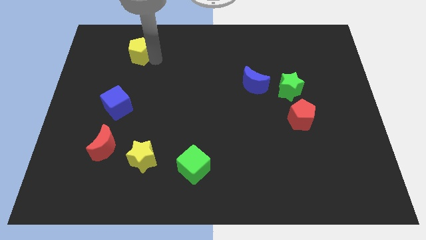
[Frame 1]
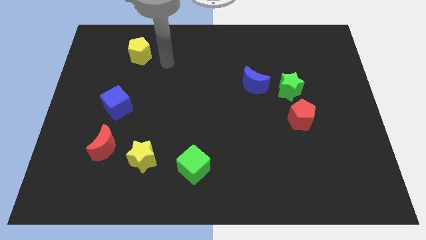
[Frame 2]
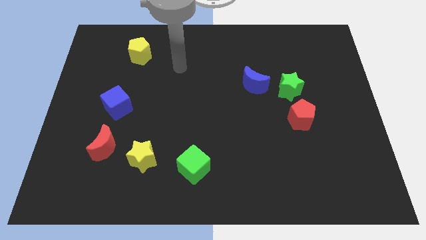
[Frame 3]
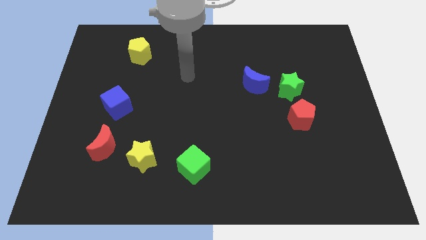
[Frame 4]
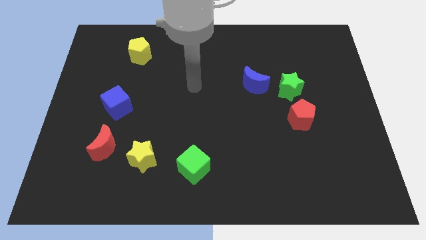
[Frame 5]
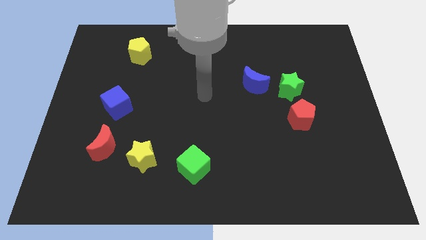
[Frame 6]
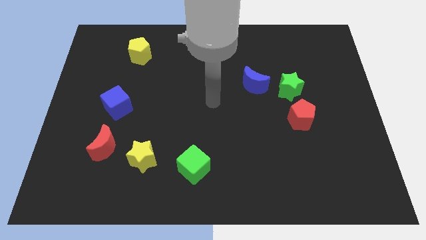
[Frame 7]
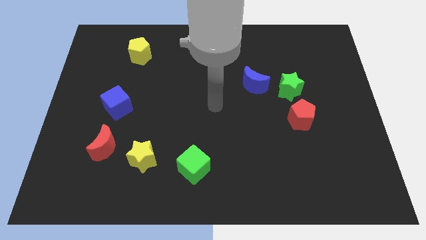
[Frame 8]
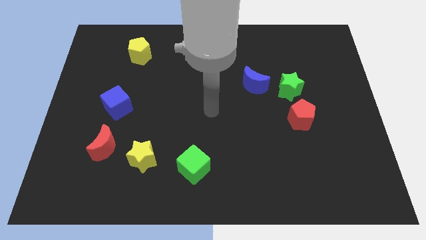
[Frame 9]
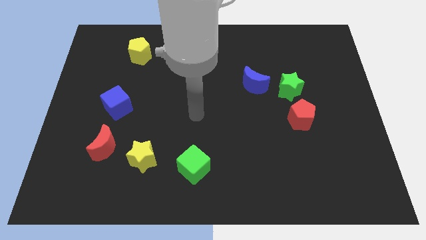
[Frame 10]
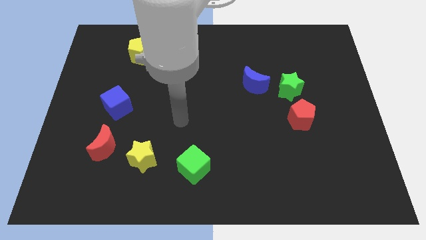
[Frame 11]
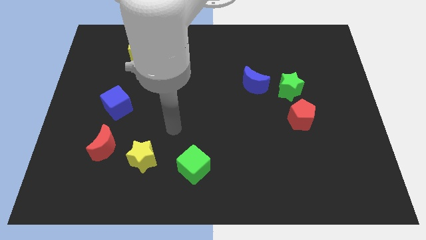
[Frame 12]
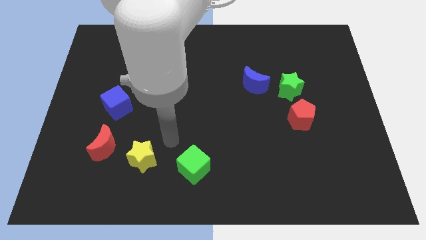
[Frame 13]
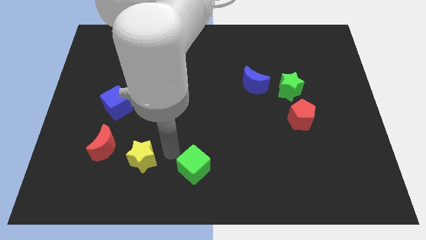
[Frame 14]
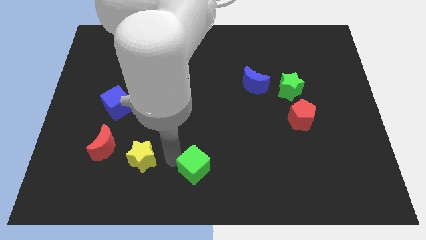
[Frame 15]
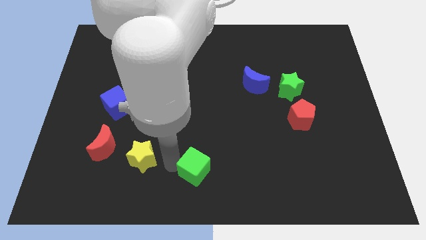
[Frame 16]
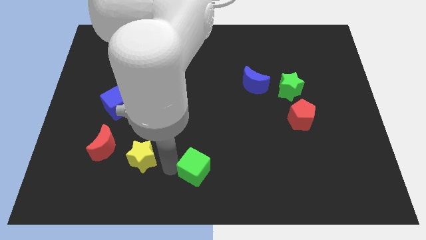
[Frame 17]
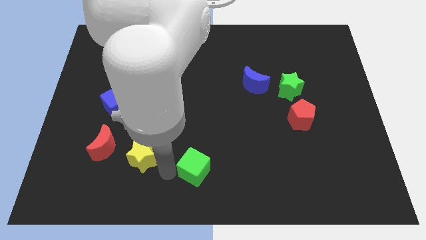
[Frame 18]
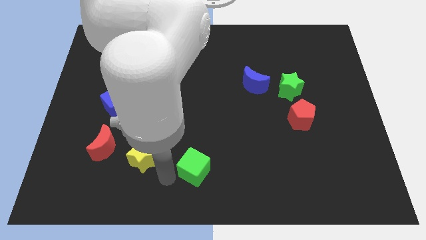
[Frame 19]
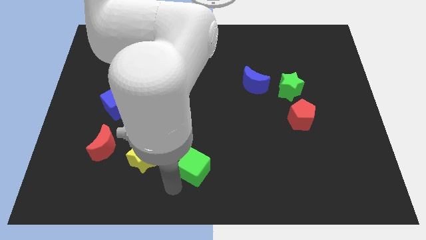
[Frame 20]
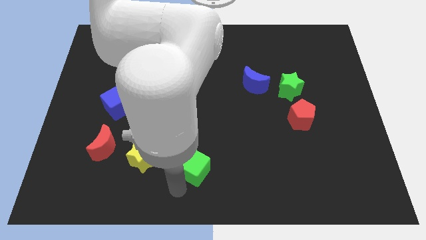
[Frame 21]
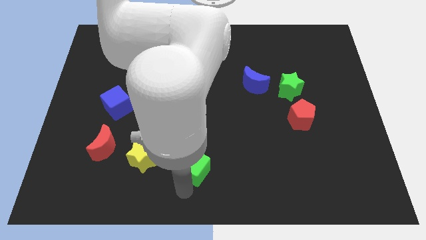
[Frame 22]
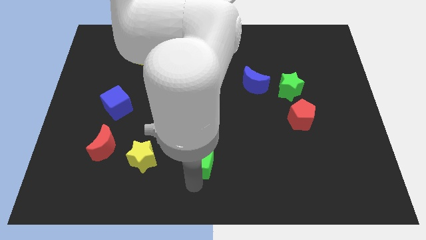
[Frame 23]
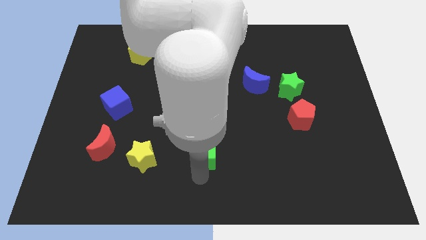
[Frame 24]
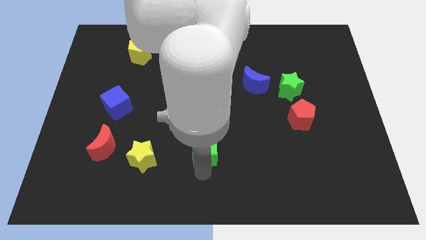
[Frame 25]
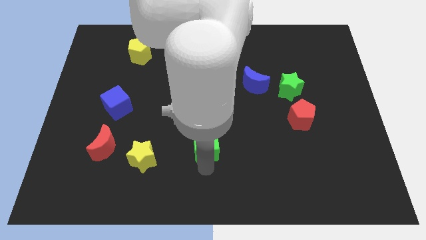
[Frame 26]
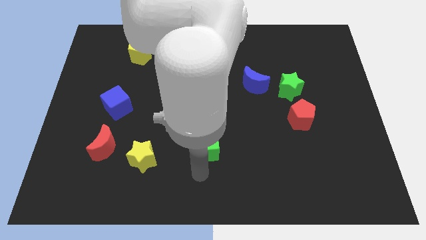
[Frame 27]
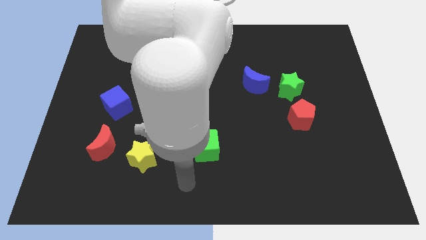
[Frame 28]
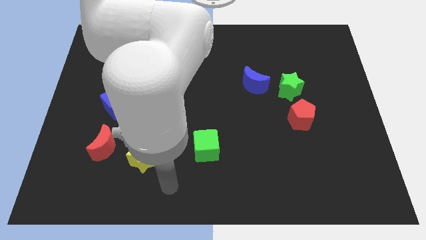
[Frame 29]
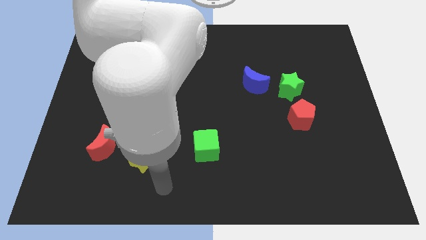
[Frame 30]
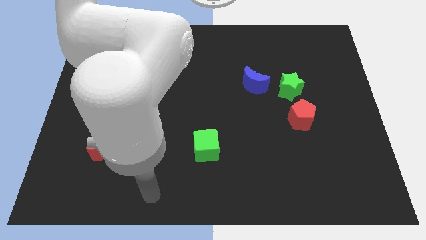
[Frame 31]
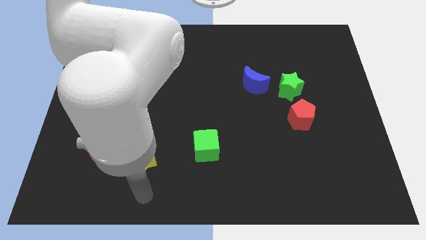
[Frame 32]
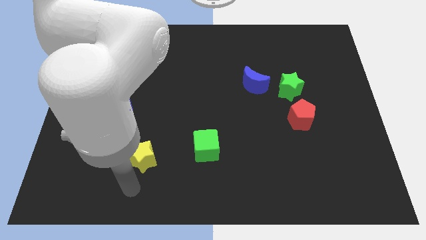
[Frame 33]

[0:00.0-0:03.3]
slightly push the green cube towards the top side of the board

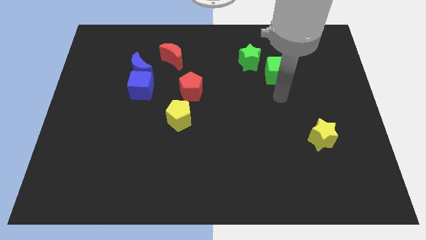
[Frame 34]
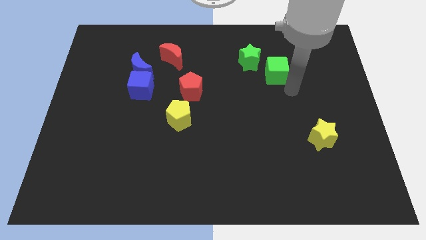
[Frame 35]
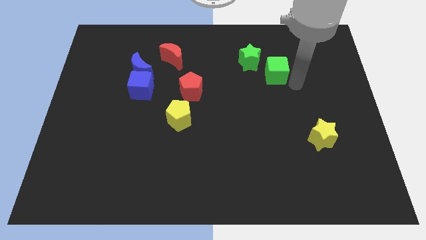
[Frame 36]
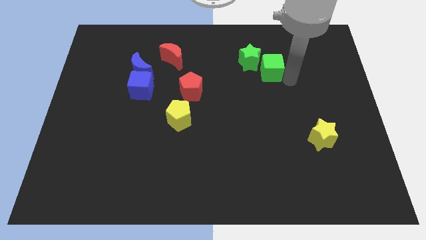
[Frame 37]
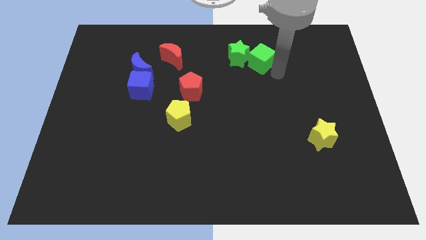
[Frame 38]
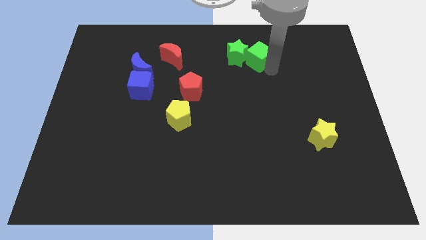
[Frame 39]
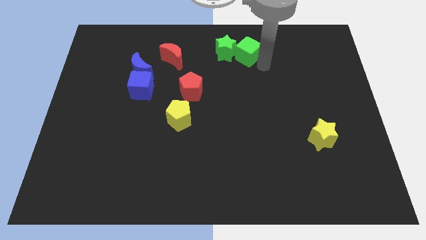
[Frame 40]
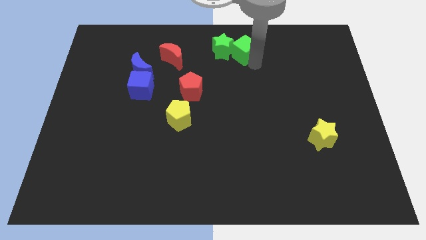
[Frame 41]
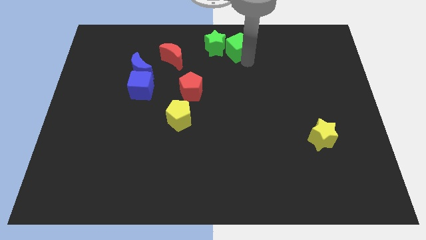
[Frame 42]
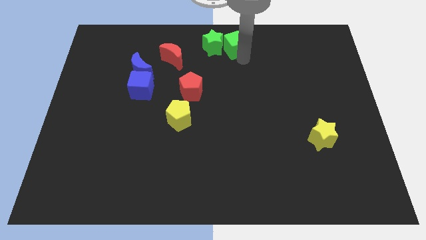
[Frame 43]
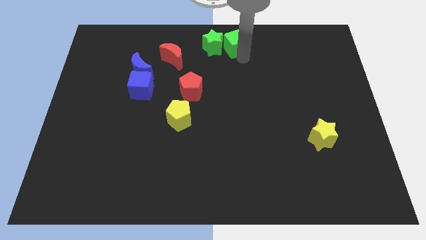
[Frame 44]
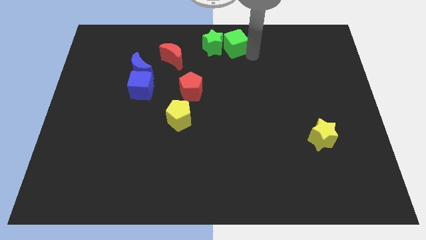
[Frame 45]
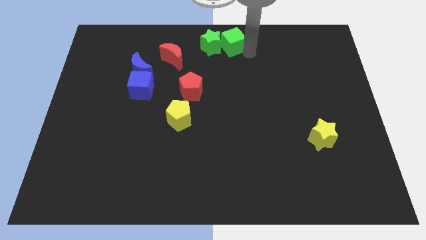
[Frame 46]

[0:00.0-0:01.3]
push green cube in to green star

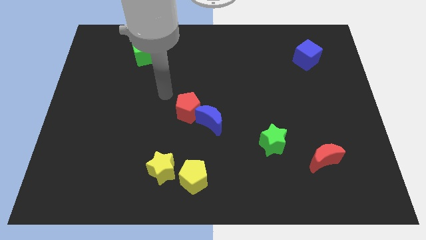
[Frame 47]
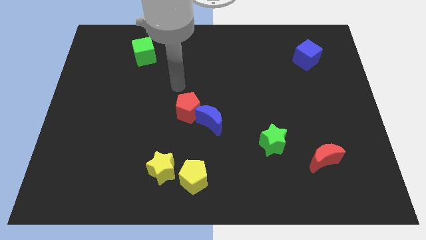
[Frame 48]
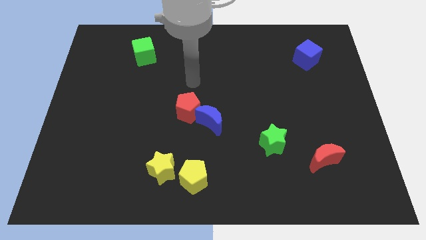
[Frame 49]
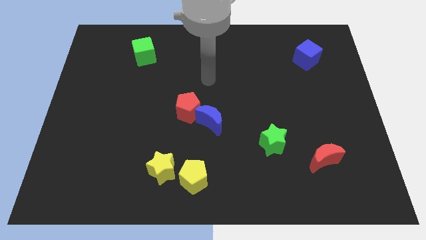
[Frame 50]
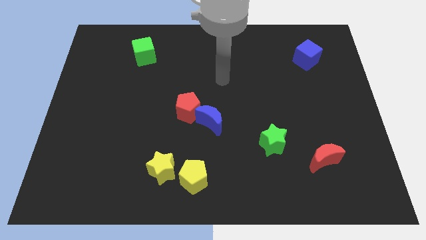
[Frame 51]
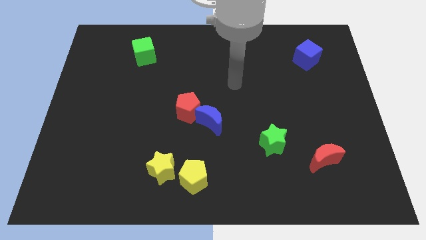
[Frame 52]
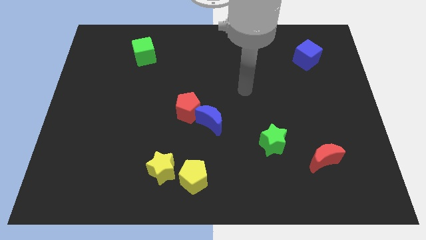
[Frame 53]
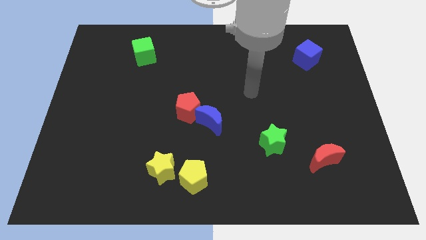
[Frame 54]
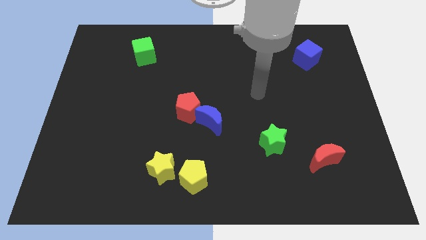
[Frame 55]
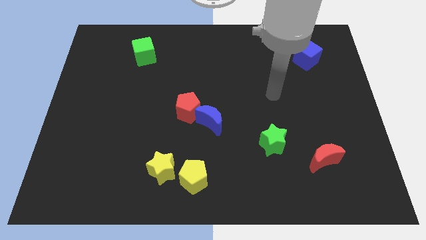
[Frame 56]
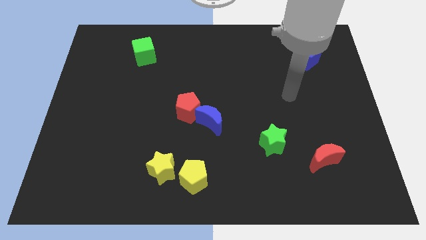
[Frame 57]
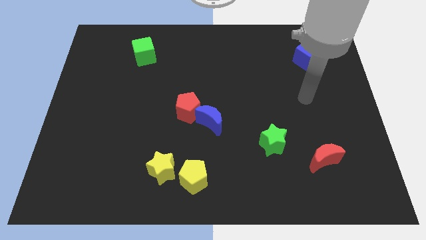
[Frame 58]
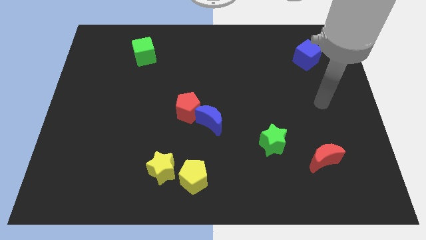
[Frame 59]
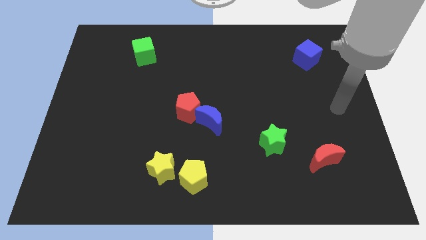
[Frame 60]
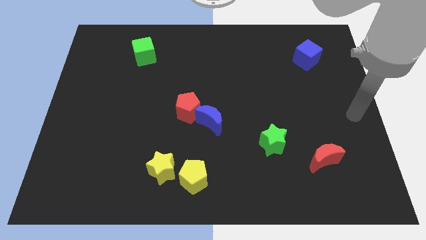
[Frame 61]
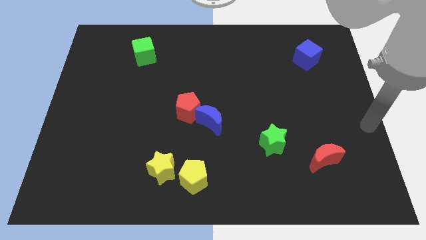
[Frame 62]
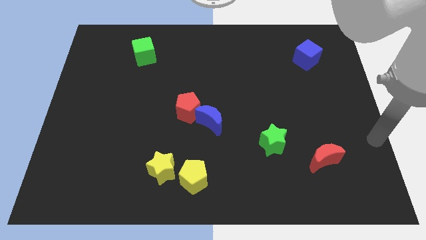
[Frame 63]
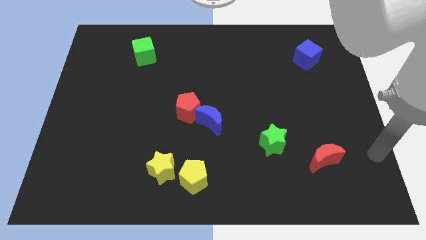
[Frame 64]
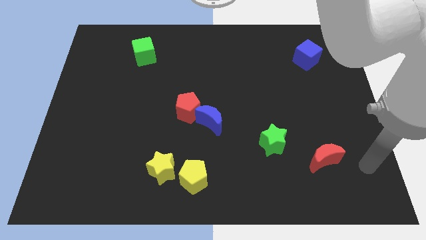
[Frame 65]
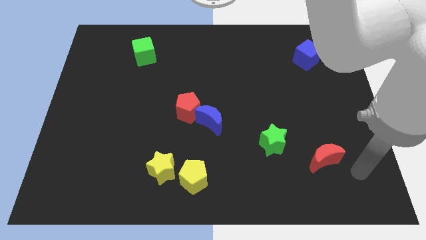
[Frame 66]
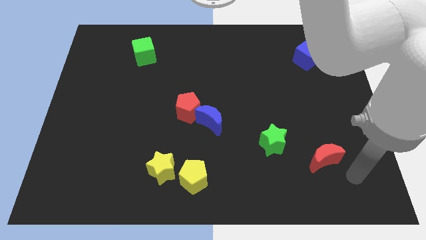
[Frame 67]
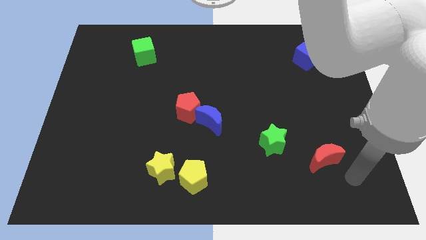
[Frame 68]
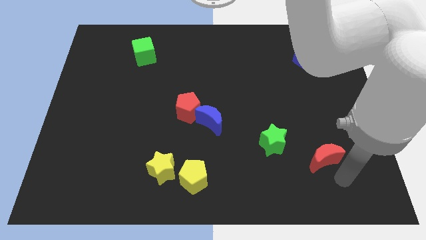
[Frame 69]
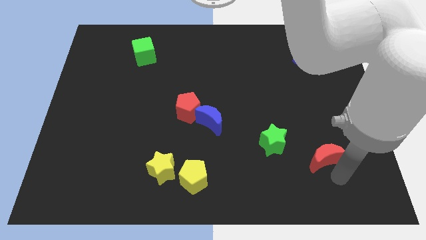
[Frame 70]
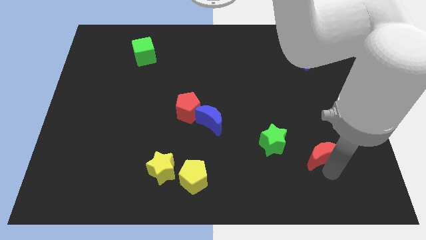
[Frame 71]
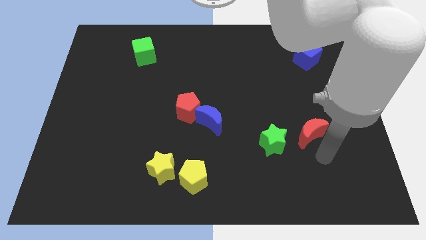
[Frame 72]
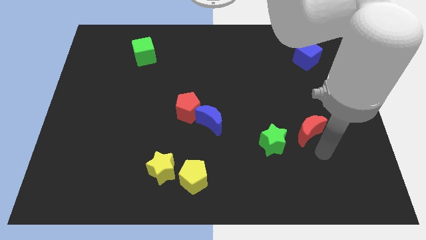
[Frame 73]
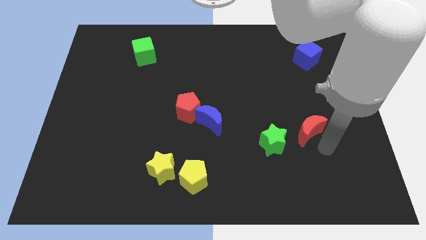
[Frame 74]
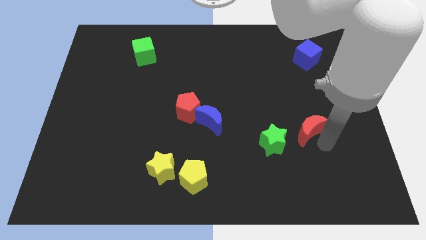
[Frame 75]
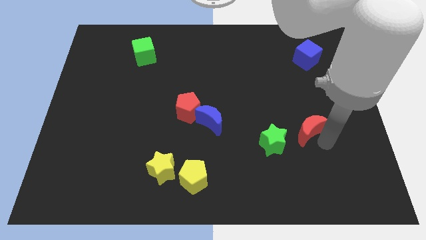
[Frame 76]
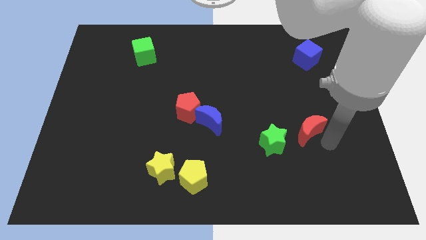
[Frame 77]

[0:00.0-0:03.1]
move the red crescent close to the green star

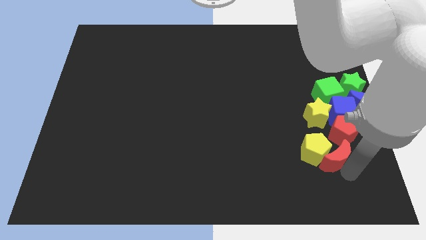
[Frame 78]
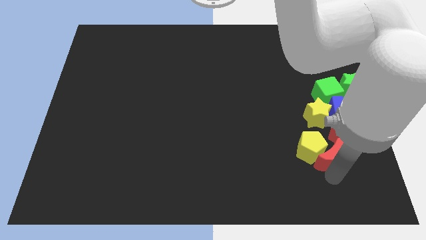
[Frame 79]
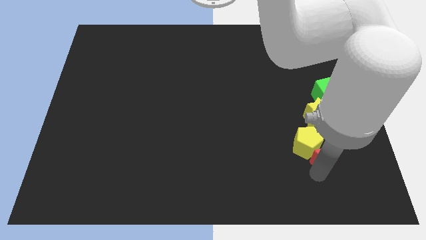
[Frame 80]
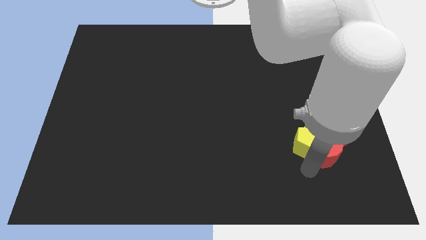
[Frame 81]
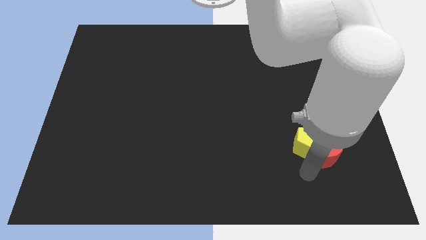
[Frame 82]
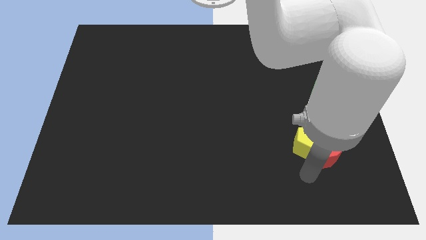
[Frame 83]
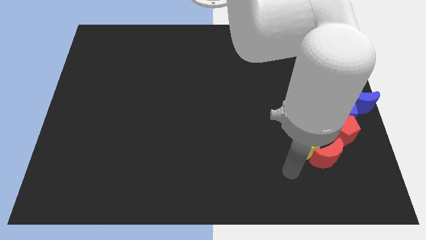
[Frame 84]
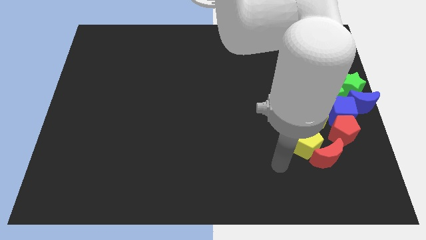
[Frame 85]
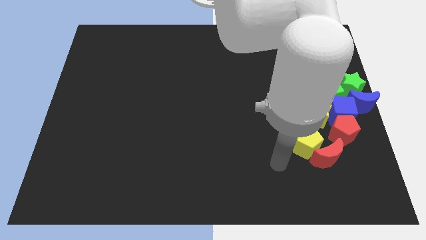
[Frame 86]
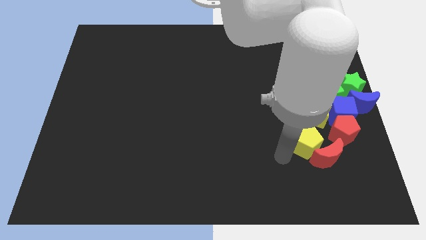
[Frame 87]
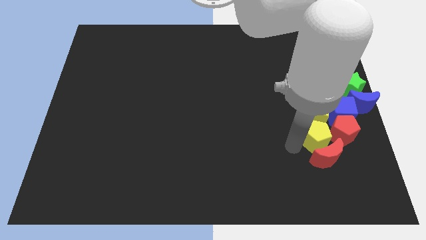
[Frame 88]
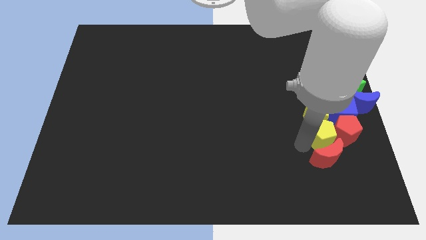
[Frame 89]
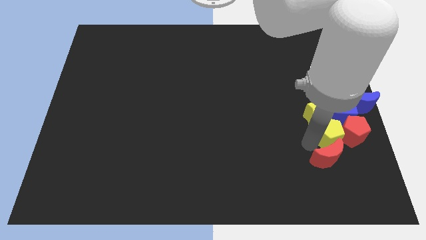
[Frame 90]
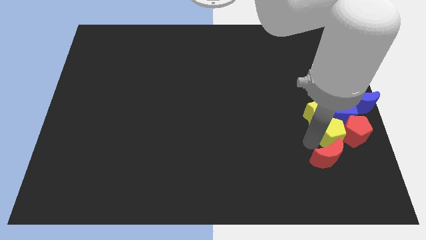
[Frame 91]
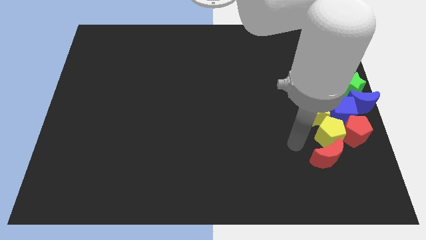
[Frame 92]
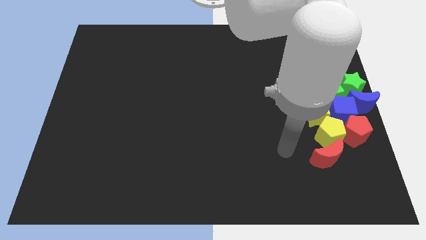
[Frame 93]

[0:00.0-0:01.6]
move yellow pentagon into group of blocks
